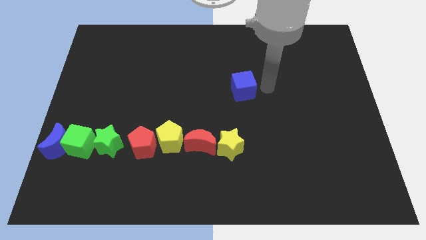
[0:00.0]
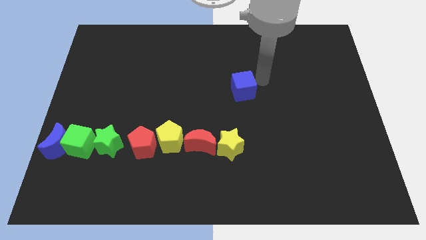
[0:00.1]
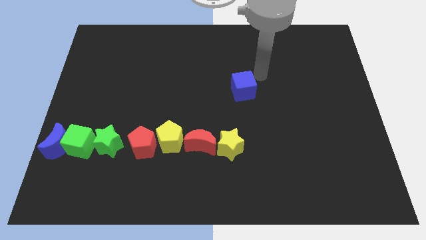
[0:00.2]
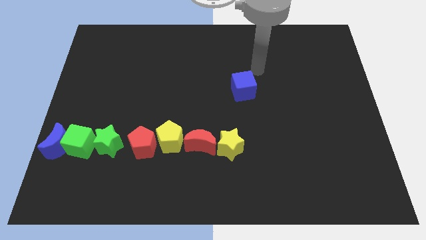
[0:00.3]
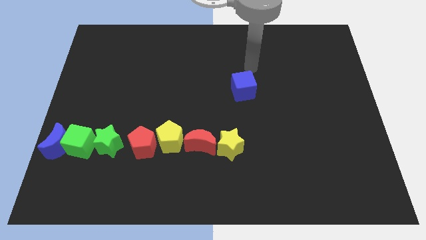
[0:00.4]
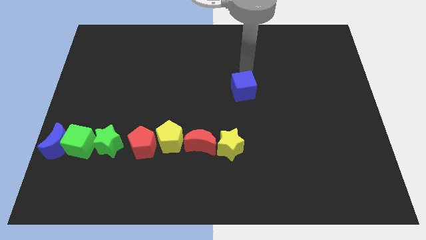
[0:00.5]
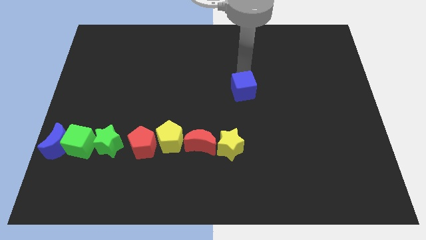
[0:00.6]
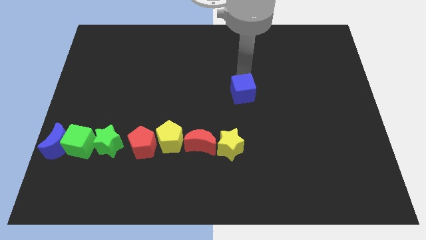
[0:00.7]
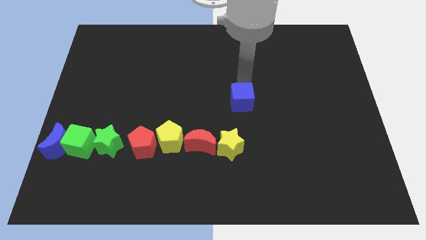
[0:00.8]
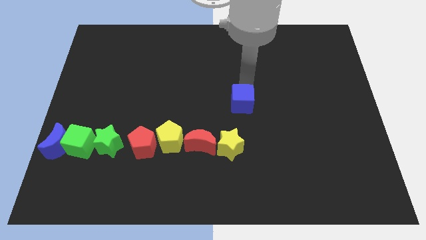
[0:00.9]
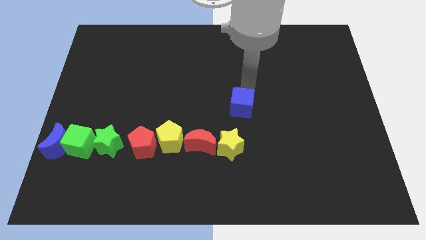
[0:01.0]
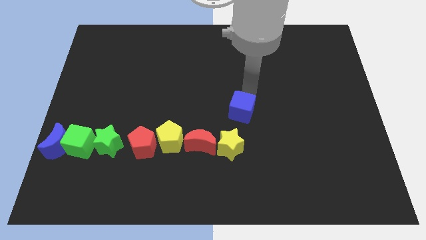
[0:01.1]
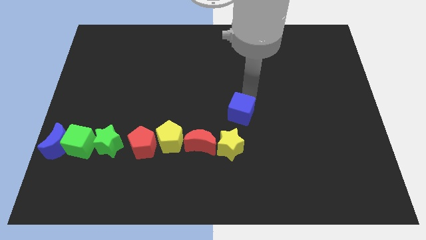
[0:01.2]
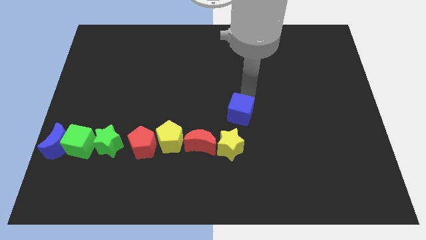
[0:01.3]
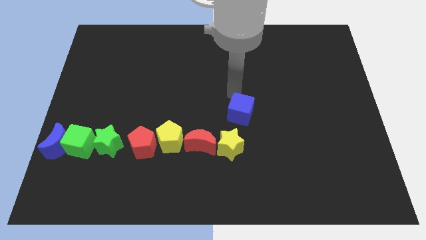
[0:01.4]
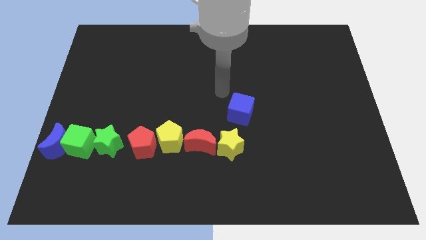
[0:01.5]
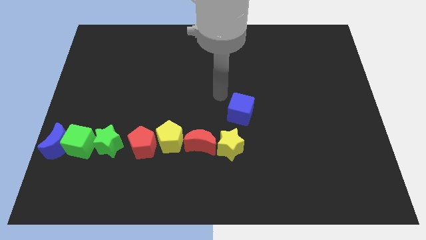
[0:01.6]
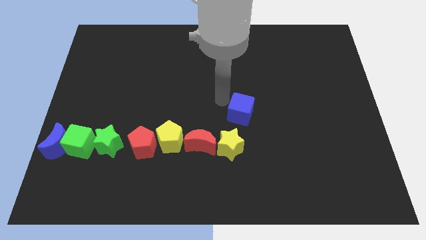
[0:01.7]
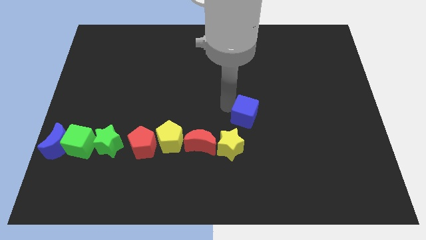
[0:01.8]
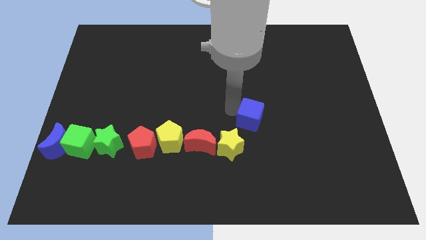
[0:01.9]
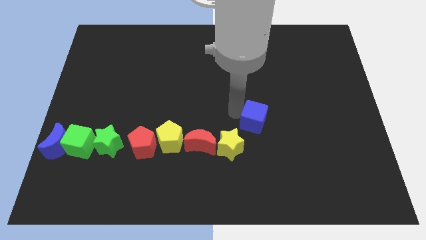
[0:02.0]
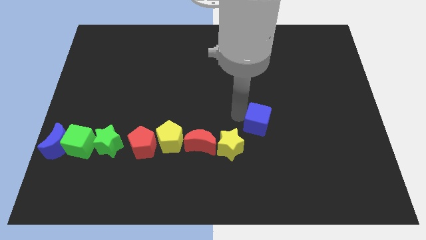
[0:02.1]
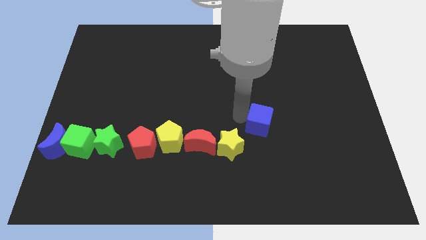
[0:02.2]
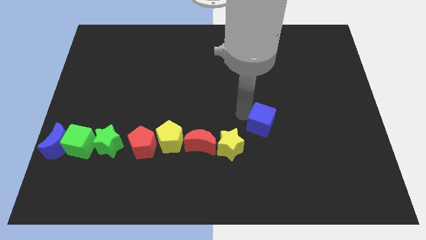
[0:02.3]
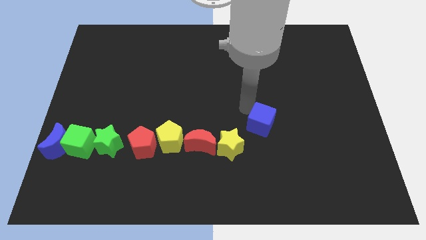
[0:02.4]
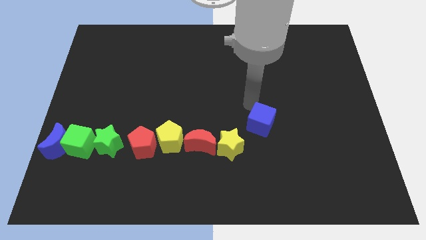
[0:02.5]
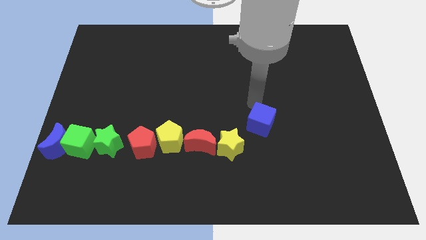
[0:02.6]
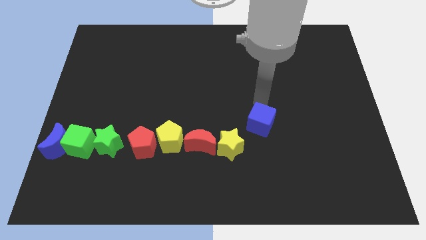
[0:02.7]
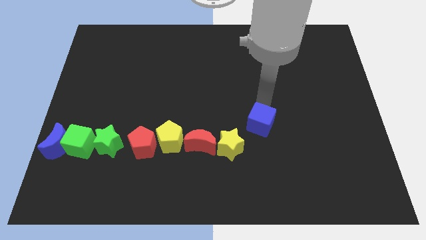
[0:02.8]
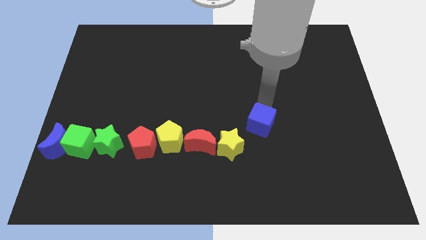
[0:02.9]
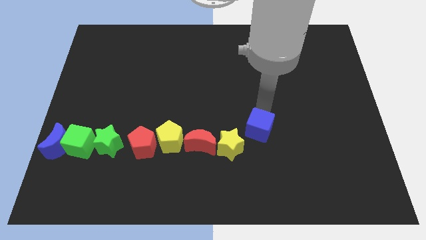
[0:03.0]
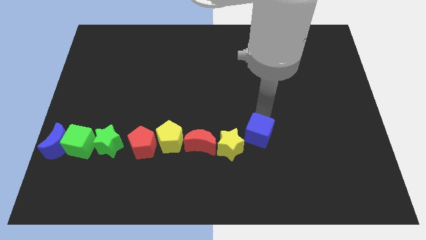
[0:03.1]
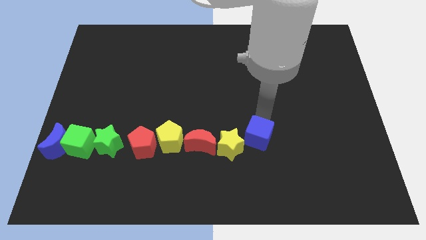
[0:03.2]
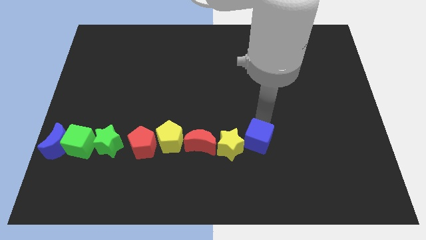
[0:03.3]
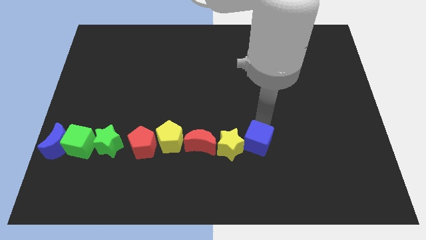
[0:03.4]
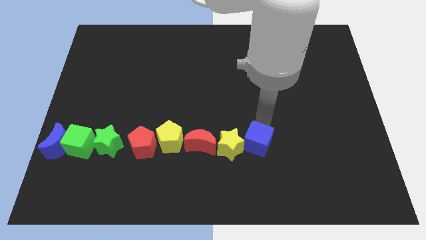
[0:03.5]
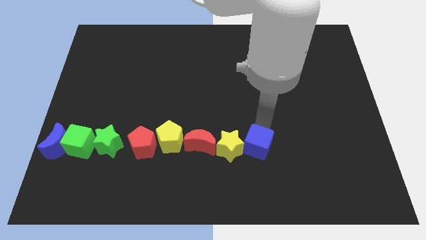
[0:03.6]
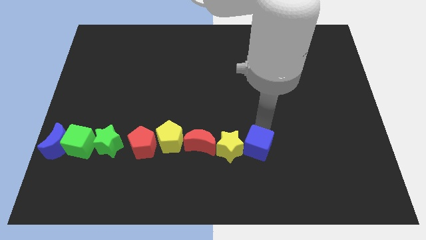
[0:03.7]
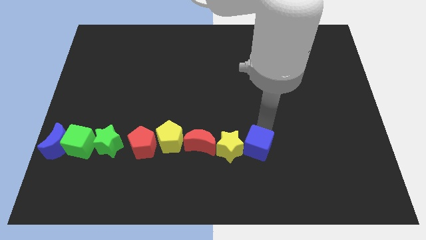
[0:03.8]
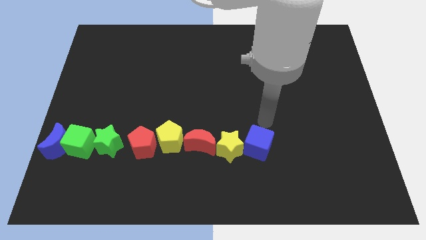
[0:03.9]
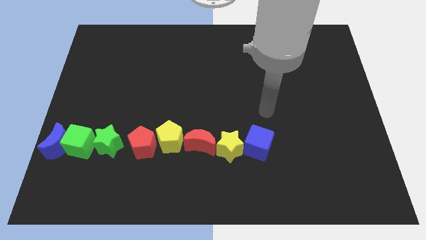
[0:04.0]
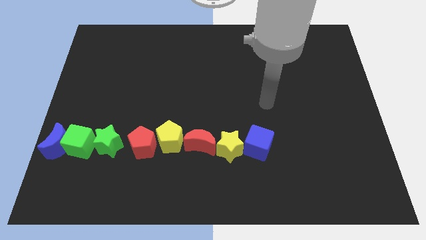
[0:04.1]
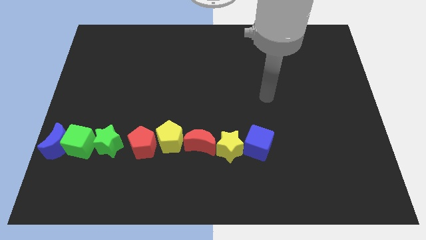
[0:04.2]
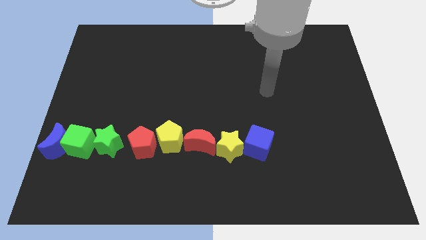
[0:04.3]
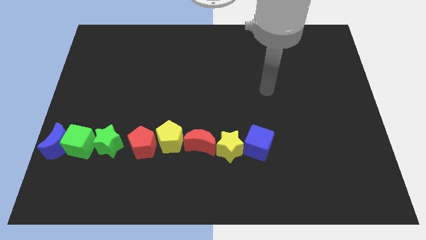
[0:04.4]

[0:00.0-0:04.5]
move the blue cube right to the yellow star

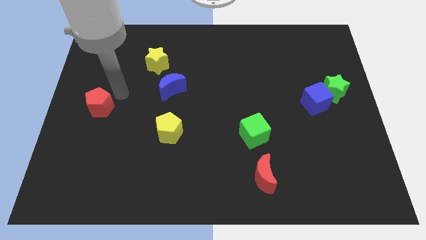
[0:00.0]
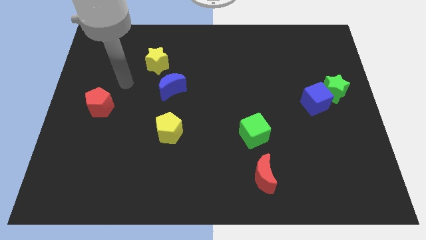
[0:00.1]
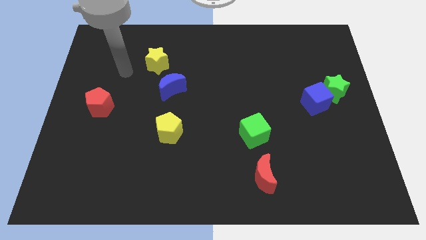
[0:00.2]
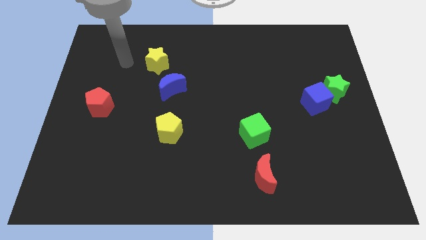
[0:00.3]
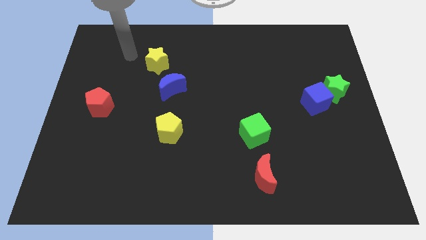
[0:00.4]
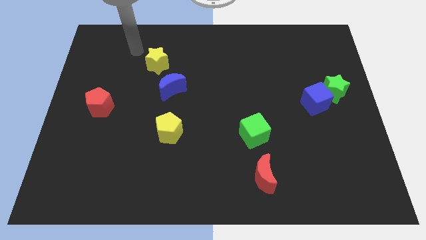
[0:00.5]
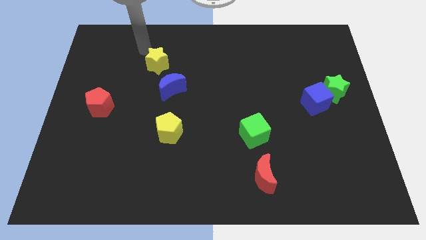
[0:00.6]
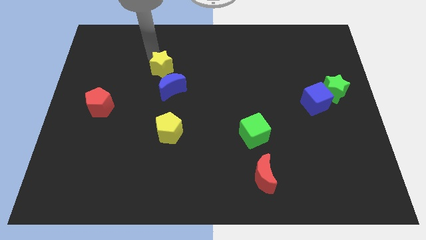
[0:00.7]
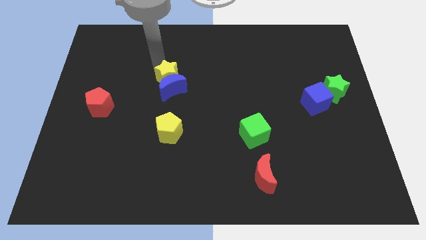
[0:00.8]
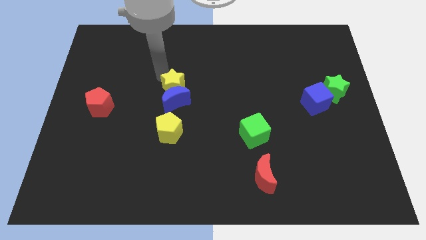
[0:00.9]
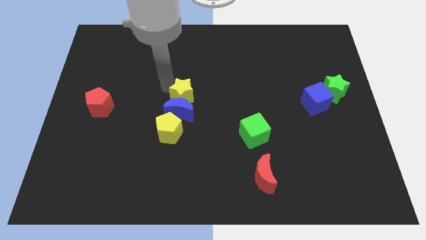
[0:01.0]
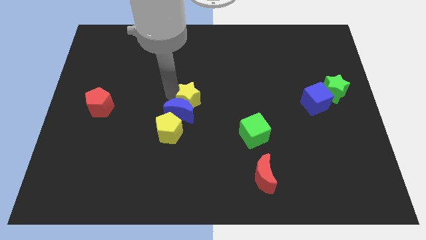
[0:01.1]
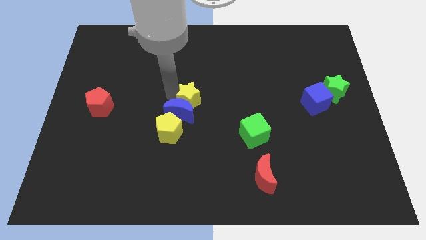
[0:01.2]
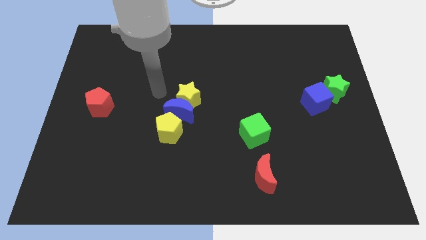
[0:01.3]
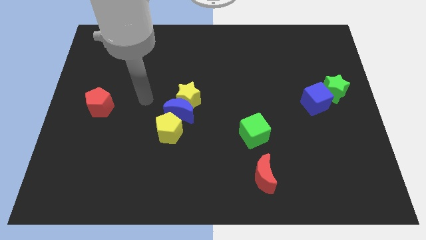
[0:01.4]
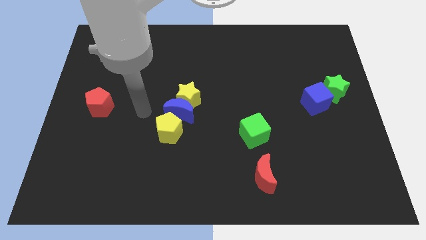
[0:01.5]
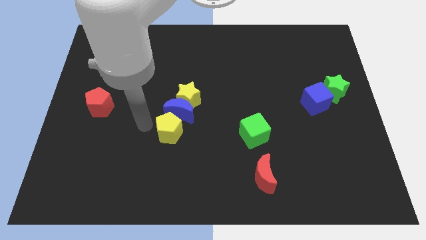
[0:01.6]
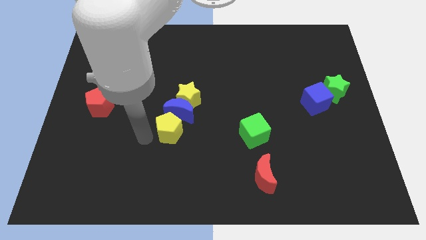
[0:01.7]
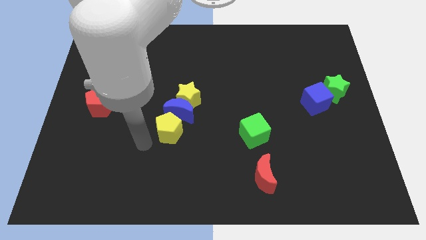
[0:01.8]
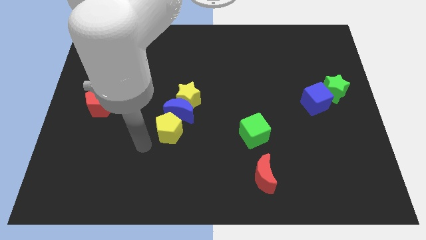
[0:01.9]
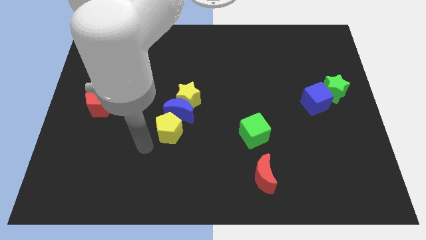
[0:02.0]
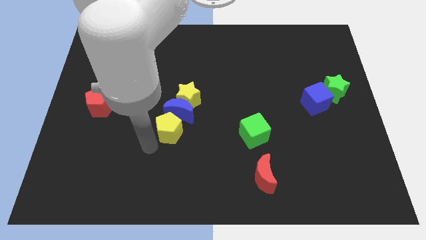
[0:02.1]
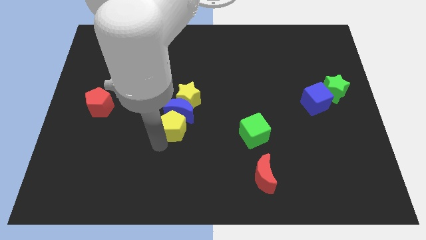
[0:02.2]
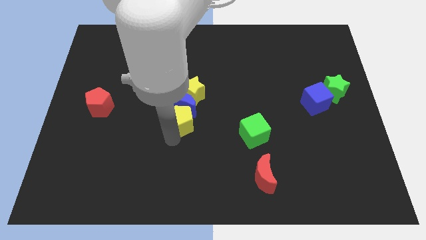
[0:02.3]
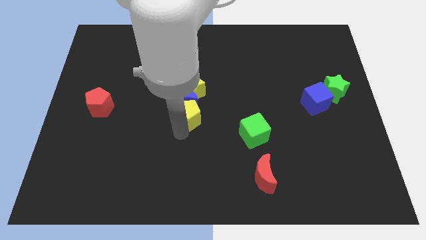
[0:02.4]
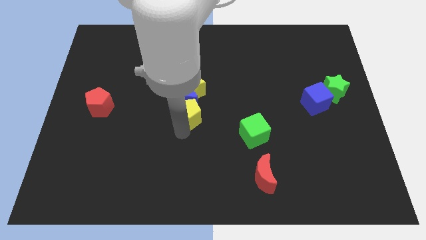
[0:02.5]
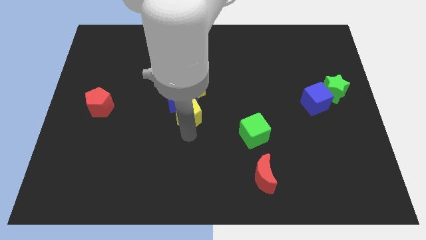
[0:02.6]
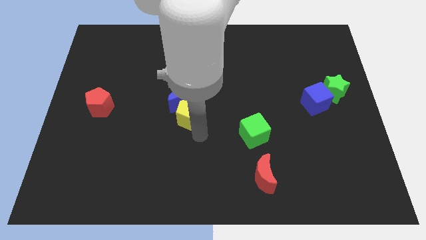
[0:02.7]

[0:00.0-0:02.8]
push the yellow blocks into the blue crescent

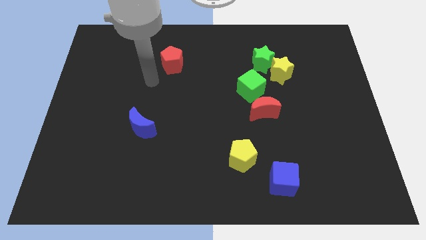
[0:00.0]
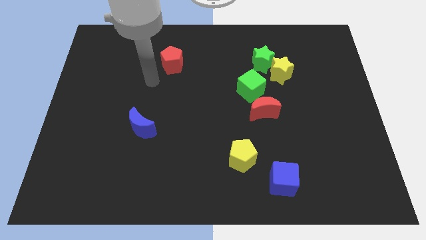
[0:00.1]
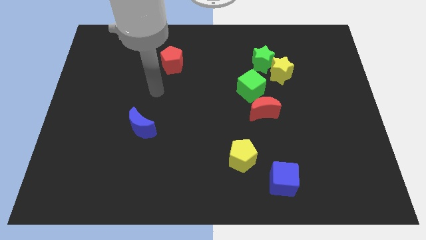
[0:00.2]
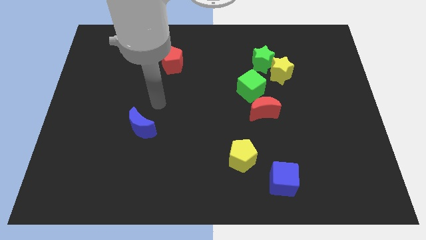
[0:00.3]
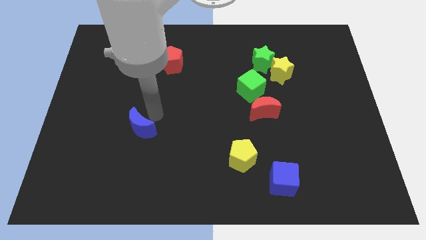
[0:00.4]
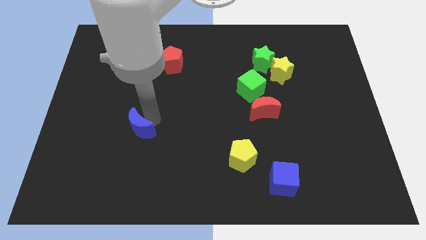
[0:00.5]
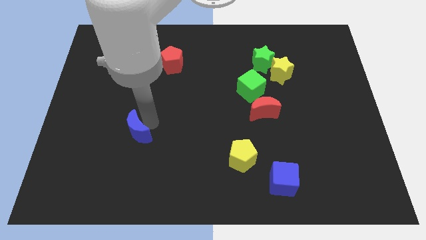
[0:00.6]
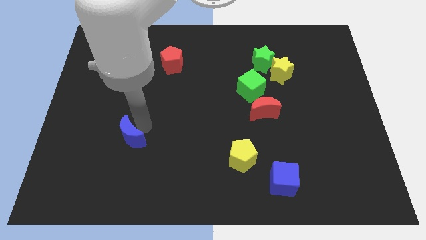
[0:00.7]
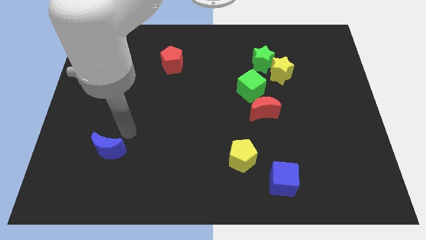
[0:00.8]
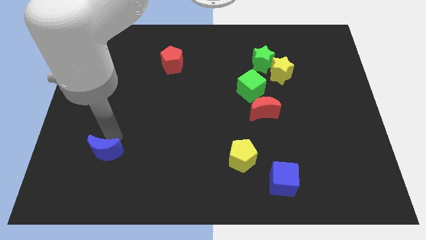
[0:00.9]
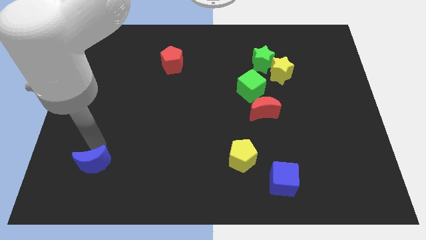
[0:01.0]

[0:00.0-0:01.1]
move the blue crescent towards bottom left side of the board

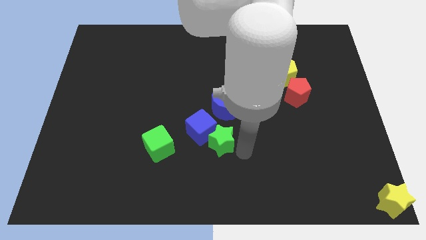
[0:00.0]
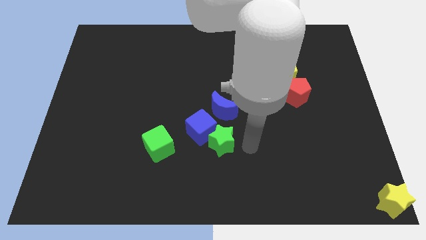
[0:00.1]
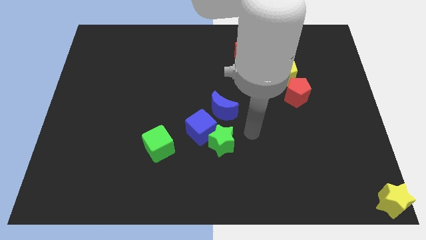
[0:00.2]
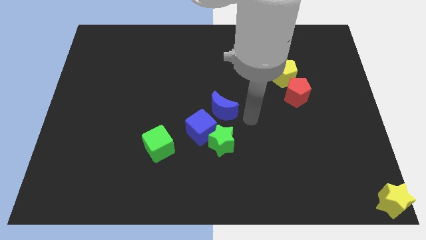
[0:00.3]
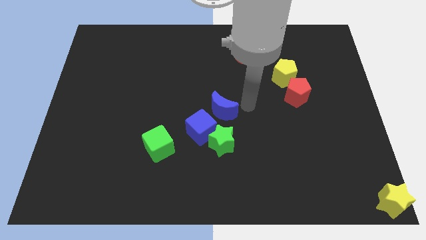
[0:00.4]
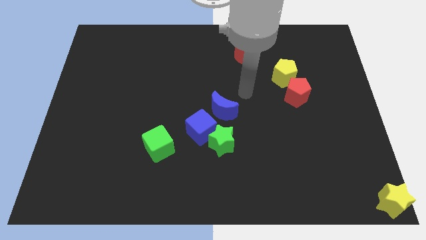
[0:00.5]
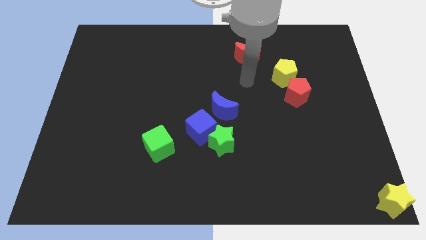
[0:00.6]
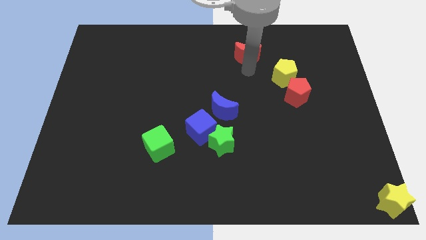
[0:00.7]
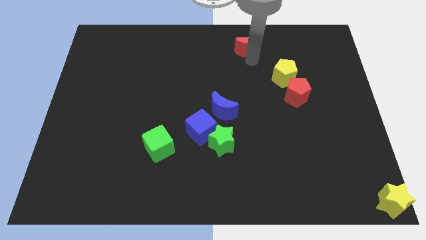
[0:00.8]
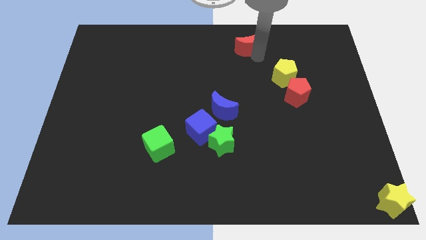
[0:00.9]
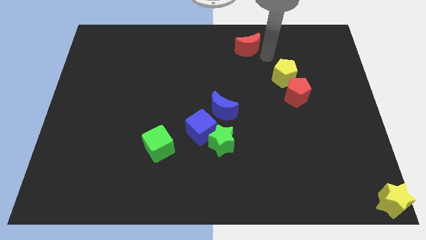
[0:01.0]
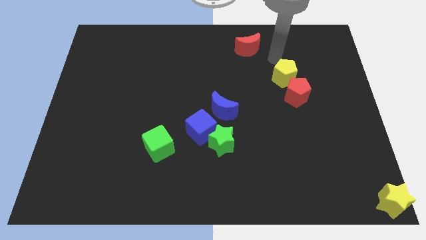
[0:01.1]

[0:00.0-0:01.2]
push the red crescent upward
